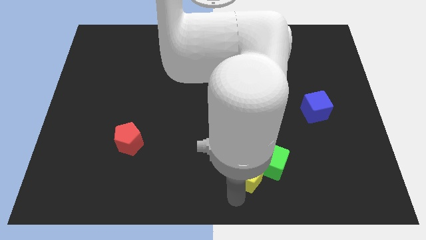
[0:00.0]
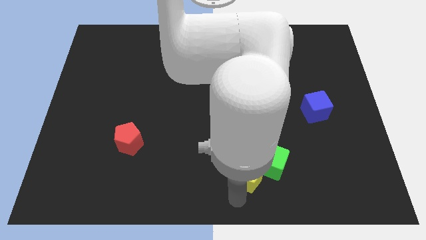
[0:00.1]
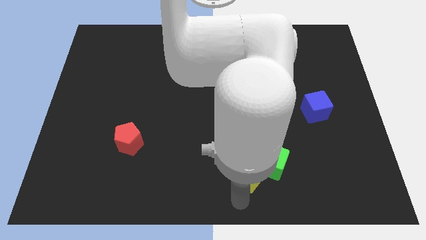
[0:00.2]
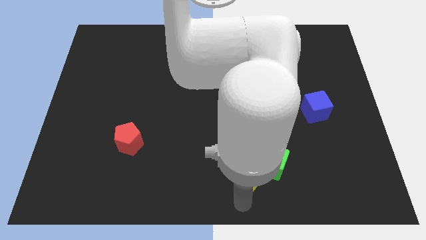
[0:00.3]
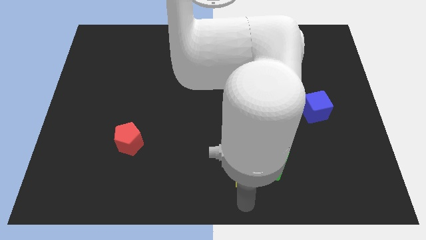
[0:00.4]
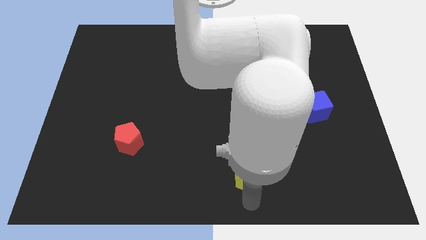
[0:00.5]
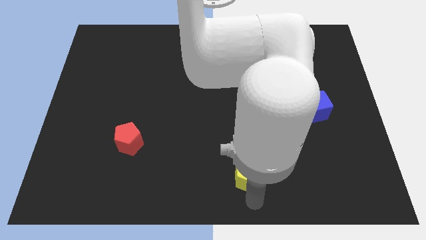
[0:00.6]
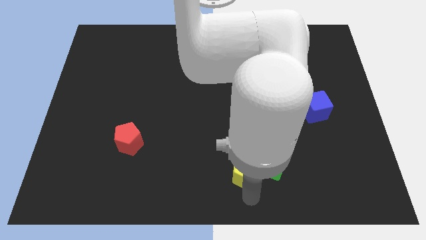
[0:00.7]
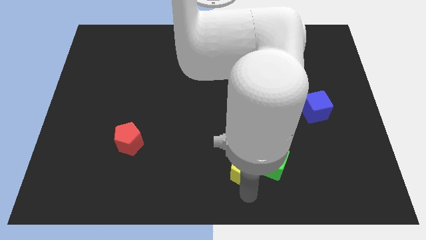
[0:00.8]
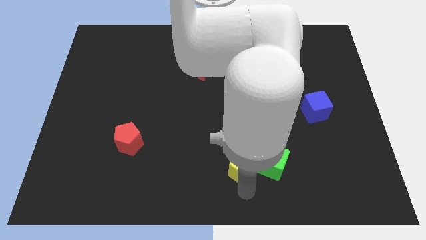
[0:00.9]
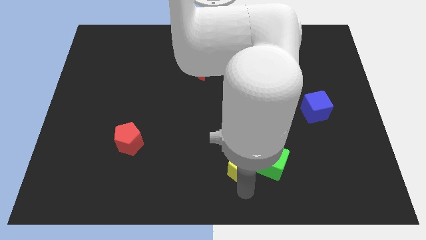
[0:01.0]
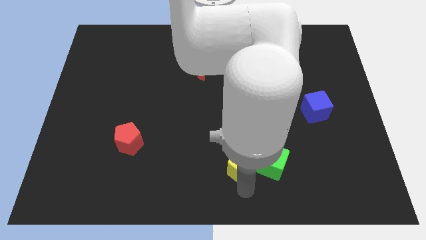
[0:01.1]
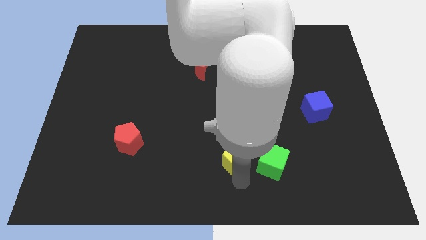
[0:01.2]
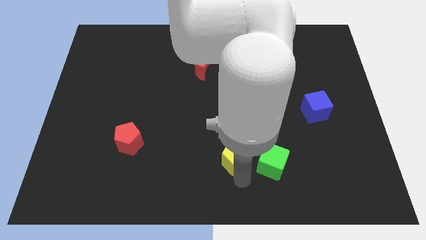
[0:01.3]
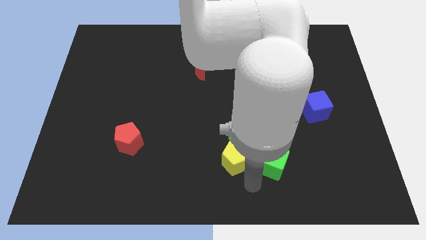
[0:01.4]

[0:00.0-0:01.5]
separate the yellow pentagon from the green cube

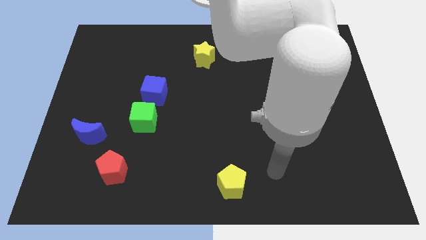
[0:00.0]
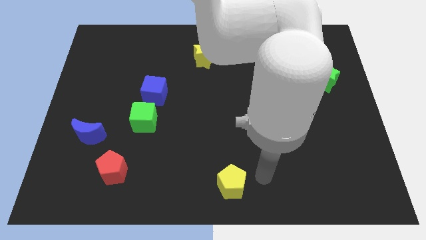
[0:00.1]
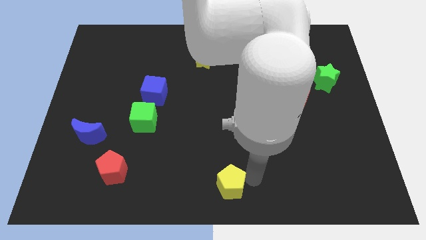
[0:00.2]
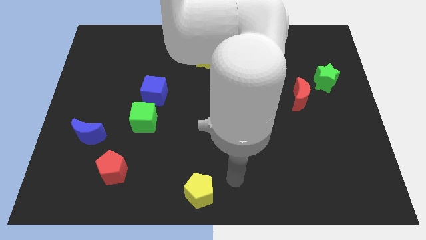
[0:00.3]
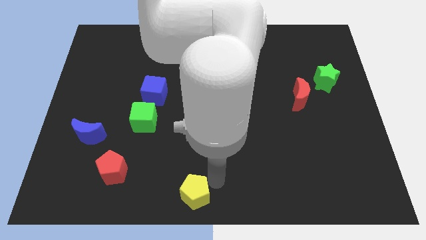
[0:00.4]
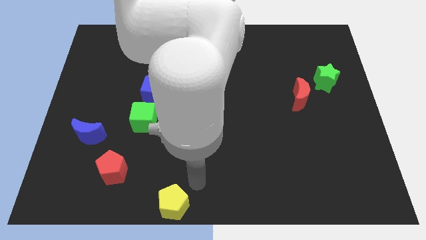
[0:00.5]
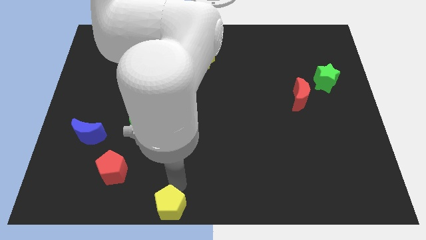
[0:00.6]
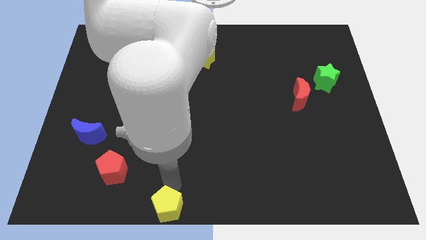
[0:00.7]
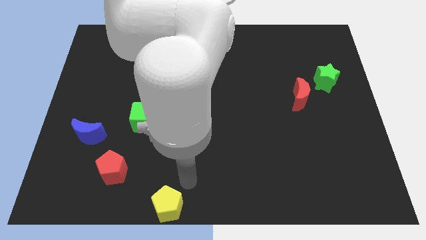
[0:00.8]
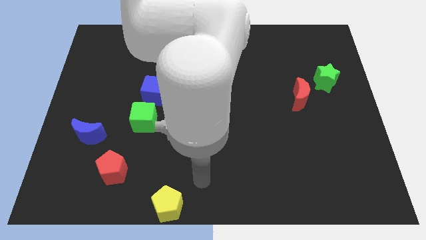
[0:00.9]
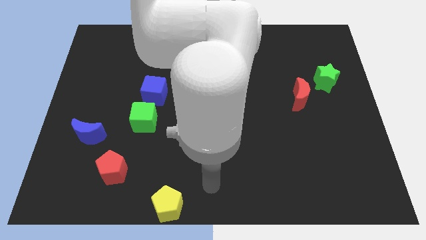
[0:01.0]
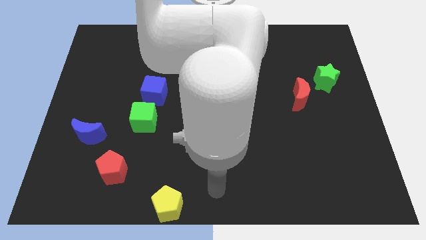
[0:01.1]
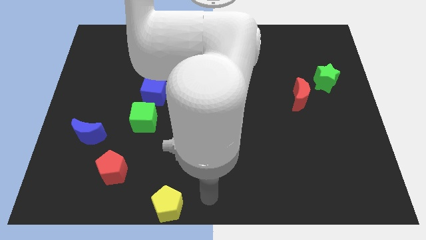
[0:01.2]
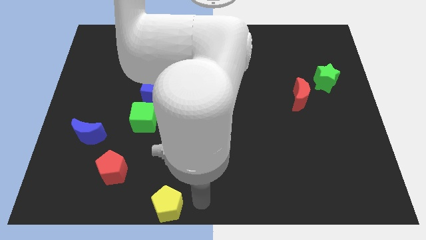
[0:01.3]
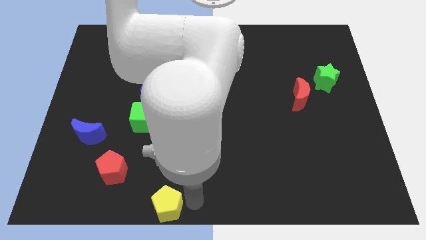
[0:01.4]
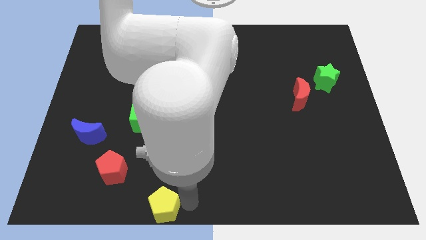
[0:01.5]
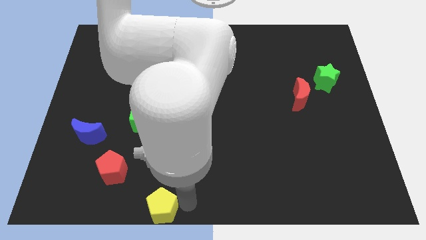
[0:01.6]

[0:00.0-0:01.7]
slide the yellow pentagon towards the bottom

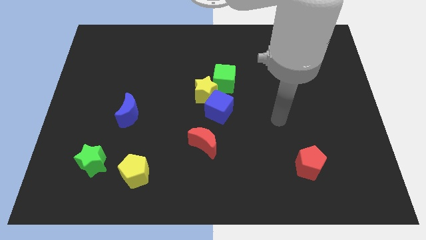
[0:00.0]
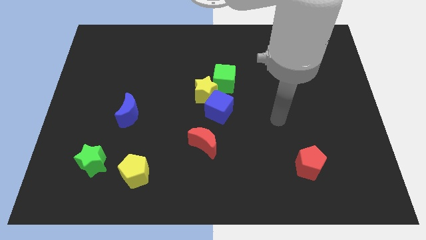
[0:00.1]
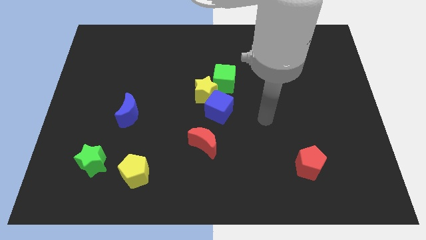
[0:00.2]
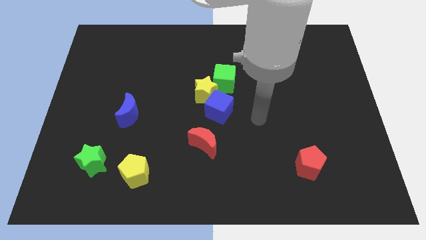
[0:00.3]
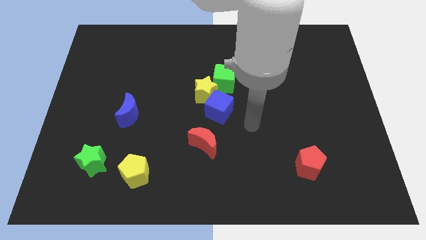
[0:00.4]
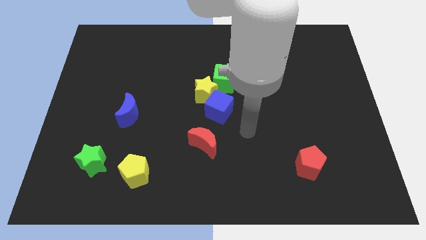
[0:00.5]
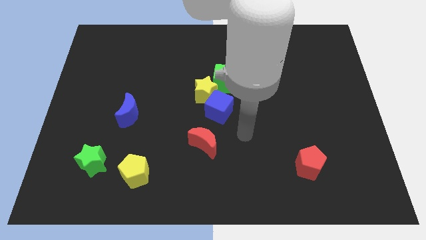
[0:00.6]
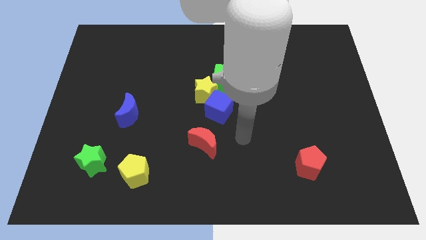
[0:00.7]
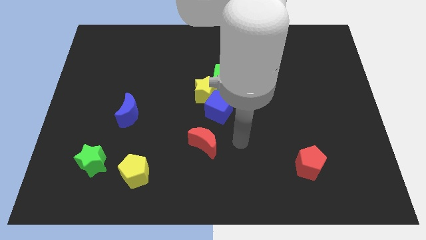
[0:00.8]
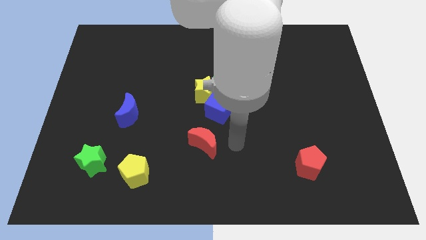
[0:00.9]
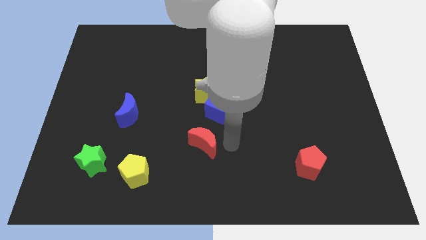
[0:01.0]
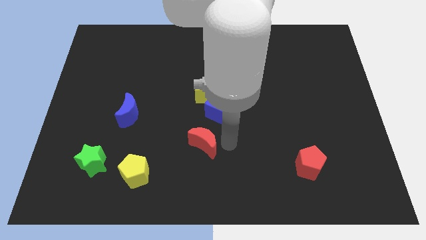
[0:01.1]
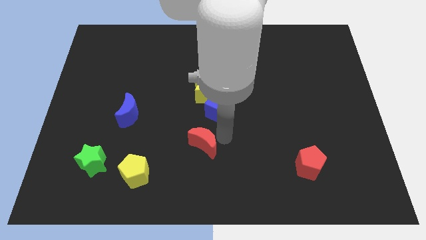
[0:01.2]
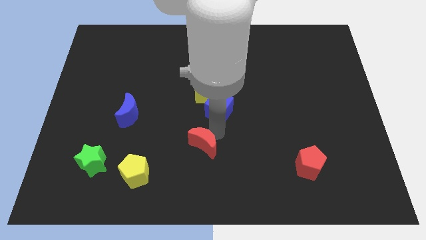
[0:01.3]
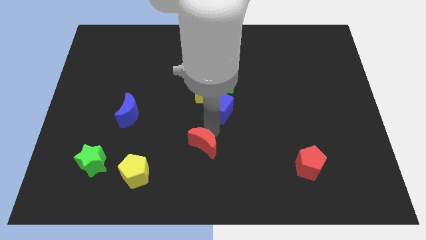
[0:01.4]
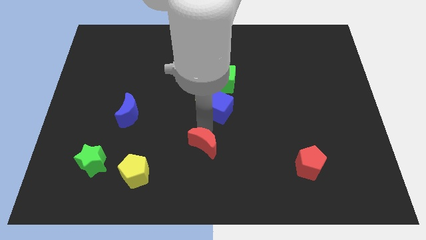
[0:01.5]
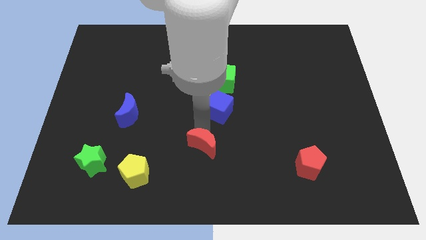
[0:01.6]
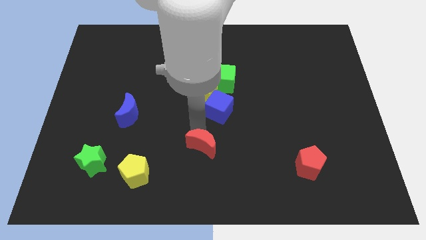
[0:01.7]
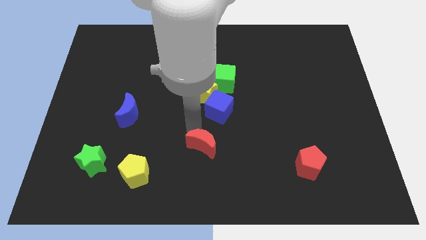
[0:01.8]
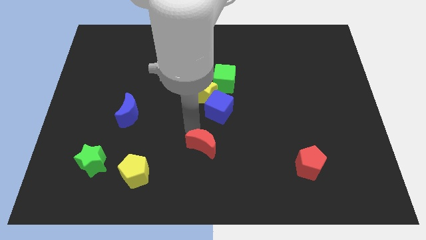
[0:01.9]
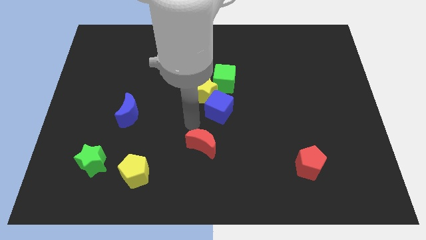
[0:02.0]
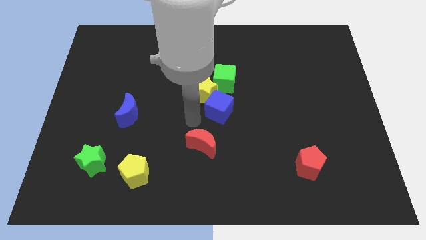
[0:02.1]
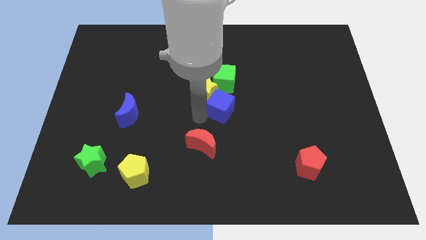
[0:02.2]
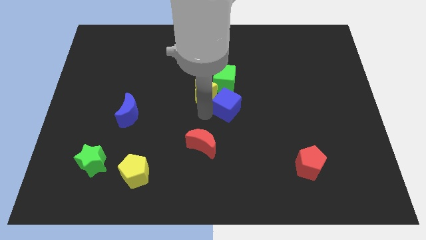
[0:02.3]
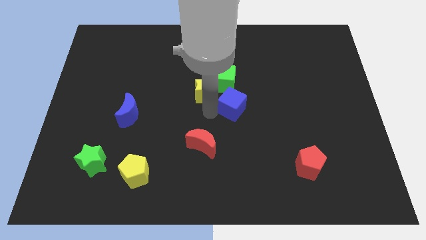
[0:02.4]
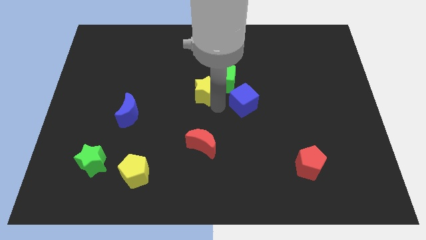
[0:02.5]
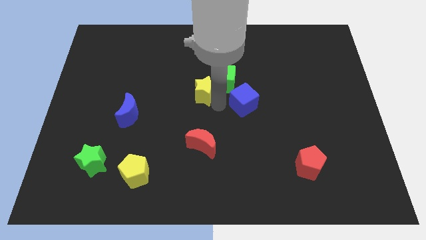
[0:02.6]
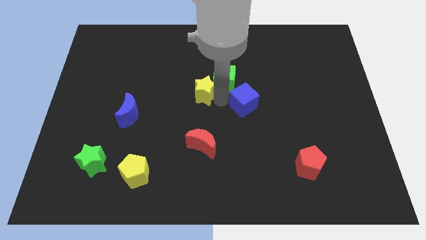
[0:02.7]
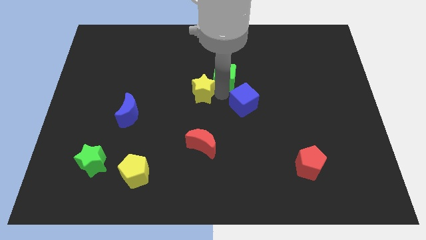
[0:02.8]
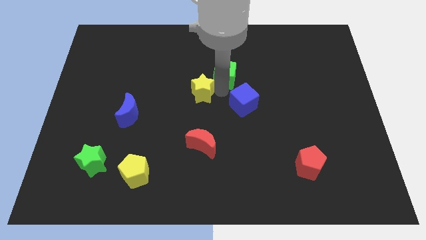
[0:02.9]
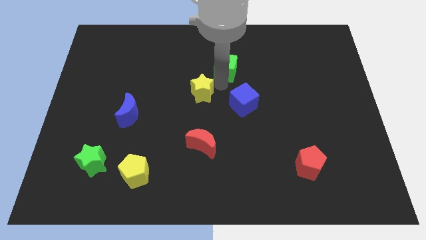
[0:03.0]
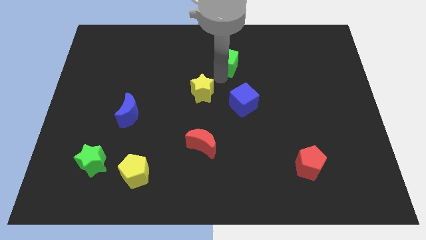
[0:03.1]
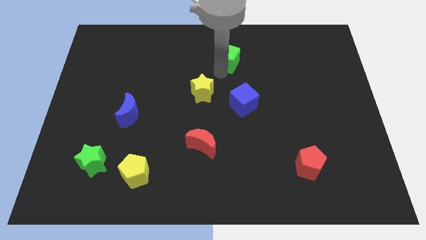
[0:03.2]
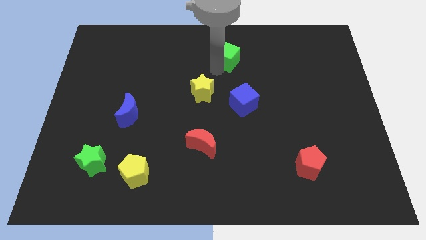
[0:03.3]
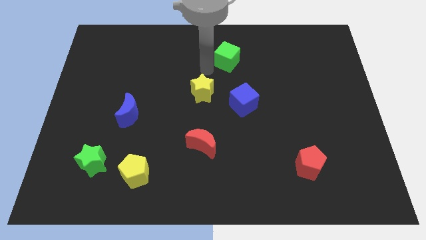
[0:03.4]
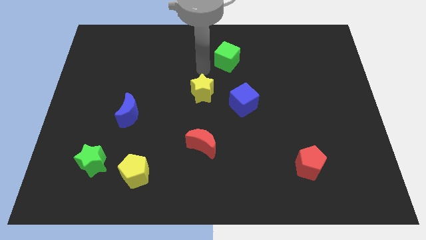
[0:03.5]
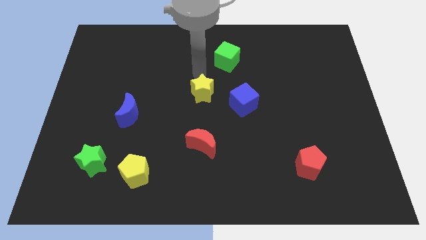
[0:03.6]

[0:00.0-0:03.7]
place green cube towards the top center of the board

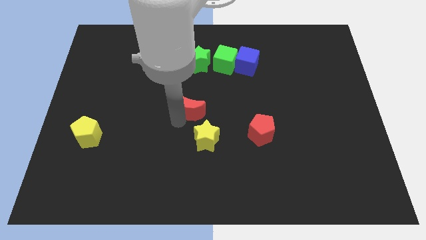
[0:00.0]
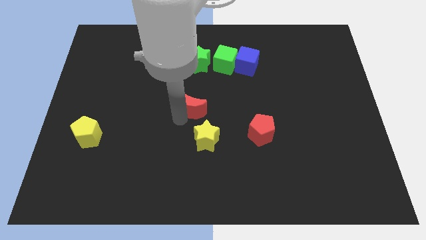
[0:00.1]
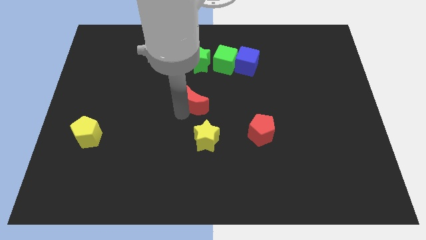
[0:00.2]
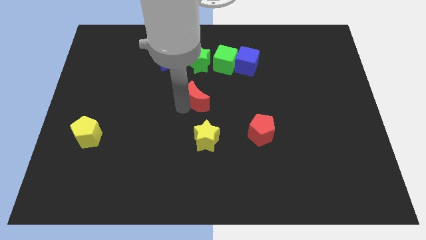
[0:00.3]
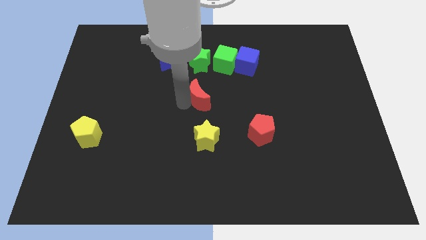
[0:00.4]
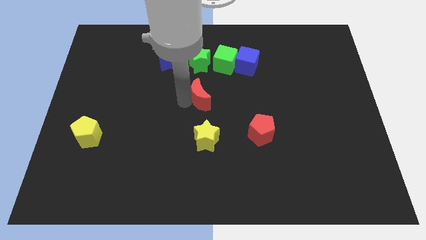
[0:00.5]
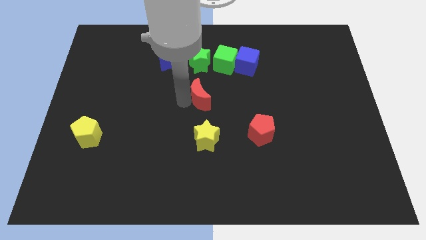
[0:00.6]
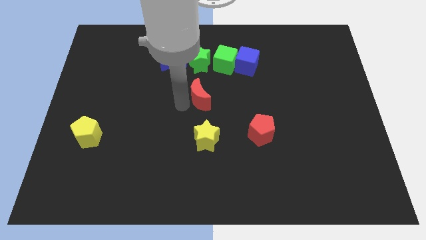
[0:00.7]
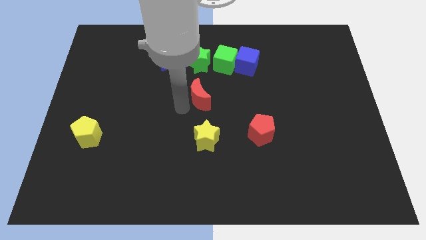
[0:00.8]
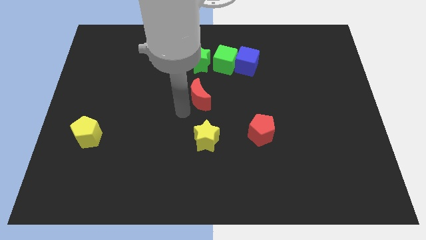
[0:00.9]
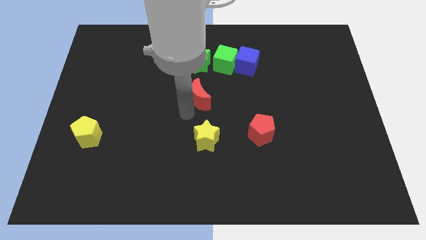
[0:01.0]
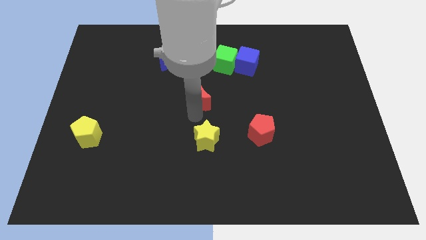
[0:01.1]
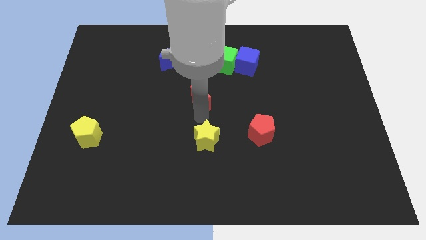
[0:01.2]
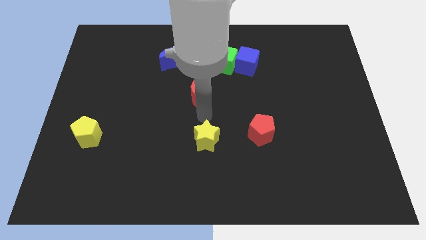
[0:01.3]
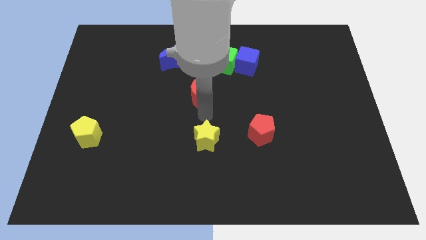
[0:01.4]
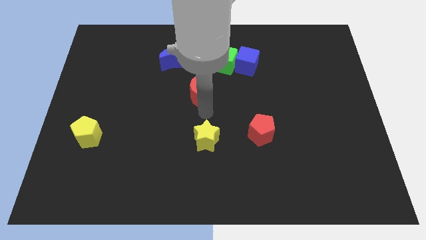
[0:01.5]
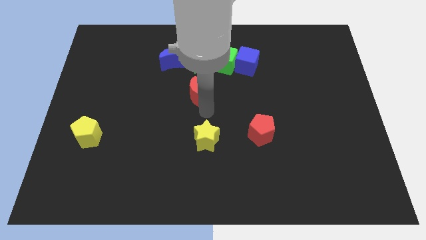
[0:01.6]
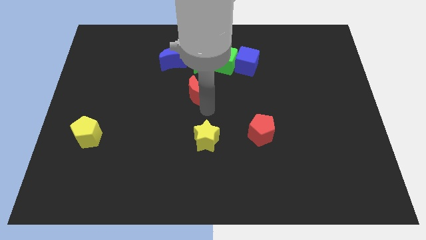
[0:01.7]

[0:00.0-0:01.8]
place the red moon between green star and yellow star
